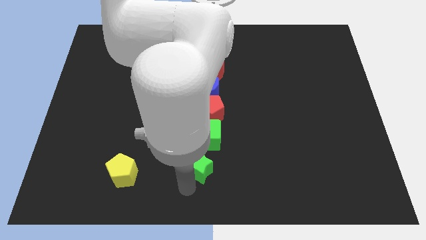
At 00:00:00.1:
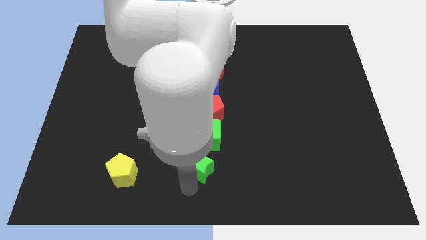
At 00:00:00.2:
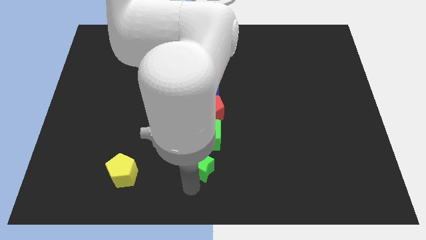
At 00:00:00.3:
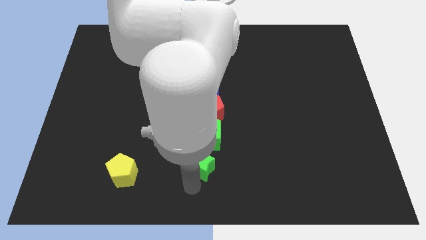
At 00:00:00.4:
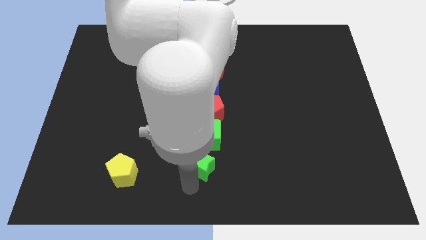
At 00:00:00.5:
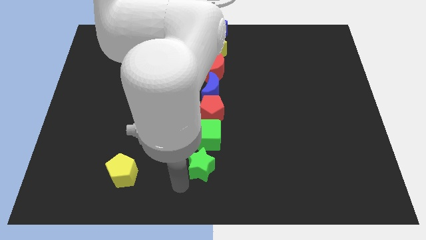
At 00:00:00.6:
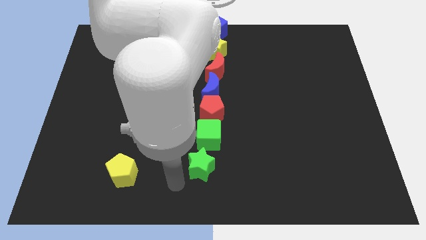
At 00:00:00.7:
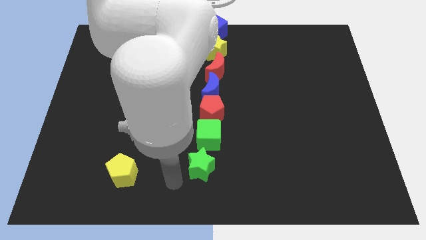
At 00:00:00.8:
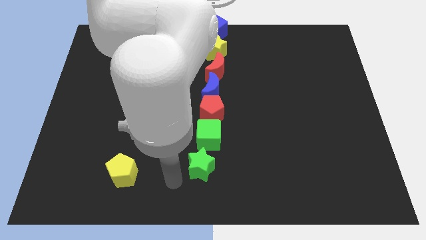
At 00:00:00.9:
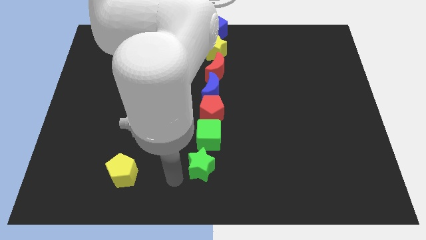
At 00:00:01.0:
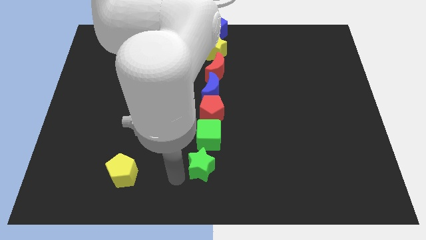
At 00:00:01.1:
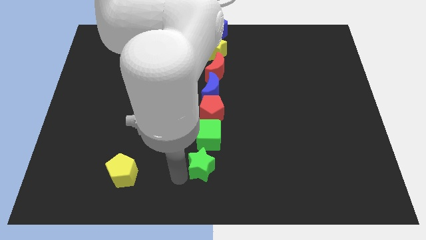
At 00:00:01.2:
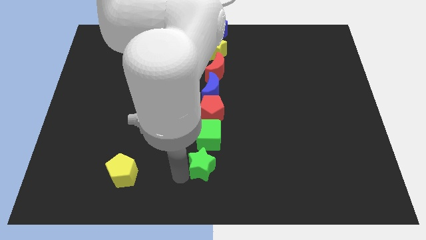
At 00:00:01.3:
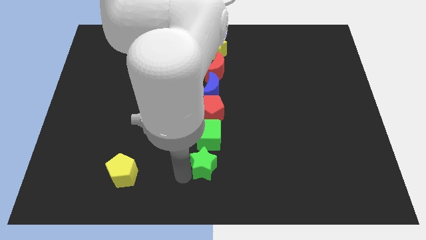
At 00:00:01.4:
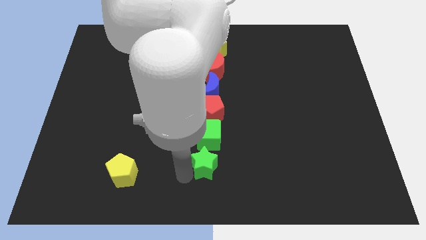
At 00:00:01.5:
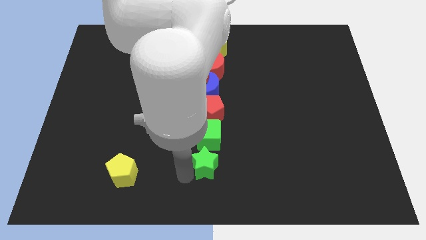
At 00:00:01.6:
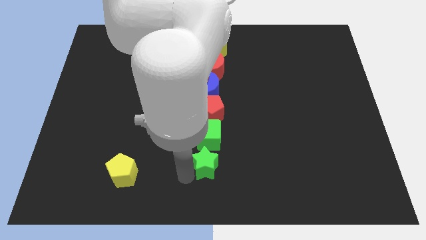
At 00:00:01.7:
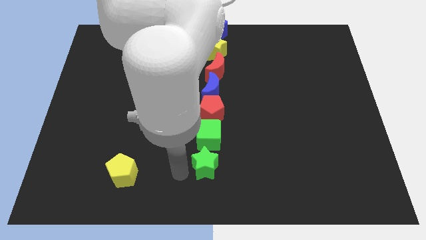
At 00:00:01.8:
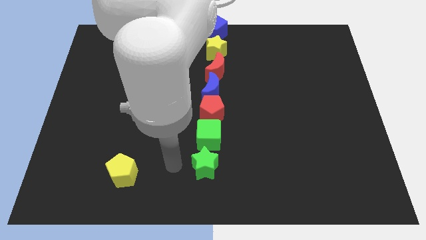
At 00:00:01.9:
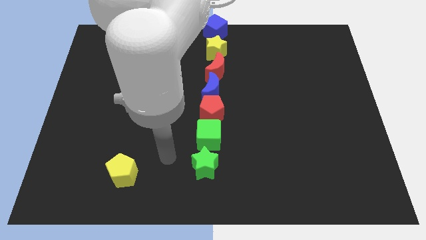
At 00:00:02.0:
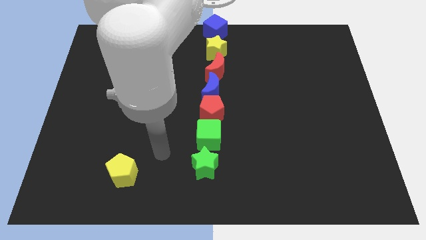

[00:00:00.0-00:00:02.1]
move the green star close to the green cube

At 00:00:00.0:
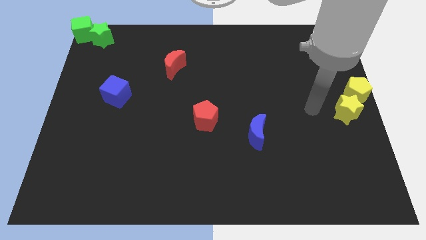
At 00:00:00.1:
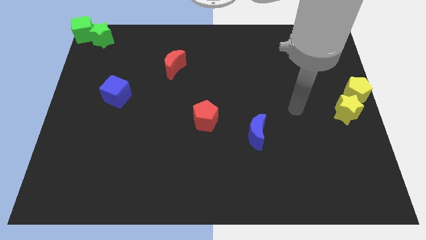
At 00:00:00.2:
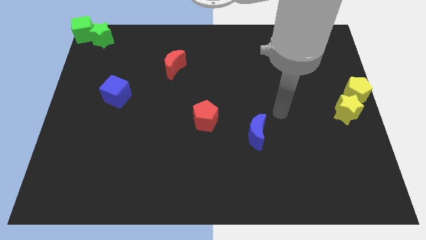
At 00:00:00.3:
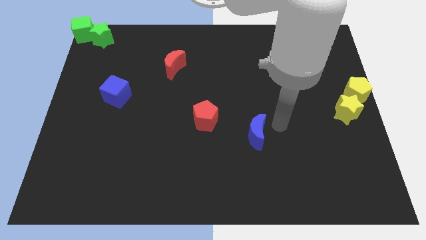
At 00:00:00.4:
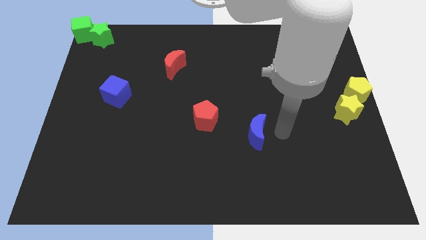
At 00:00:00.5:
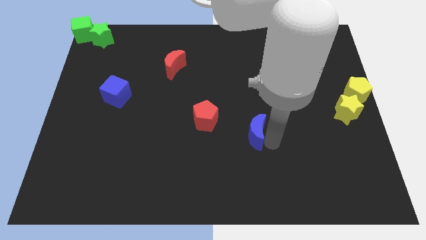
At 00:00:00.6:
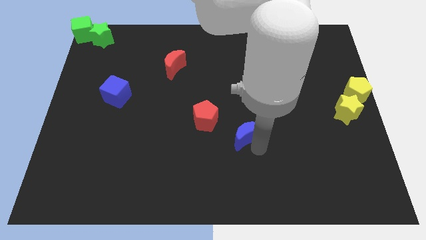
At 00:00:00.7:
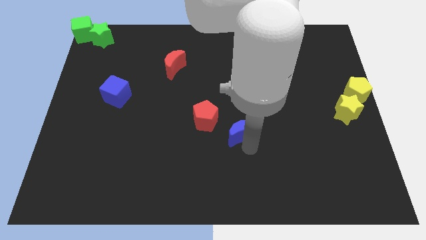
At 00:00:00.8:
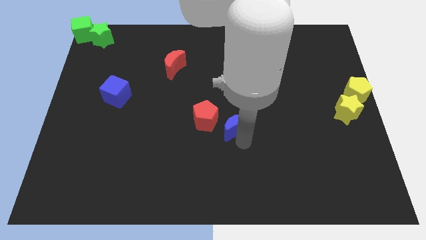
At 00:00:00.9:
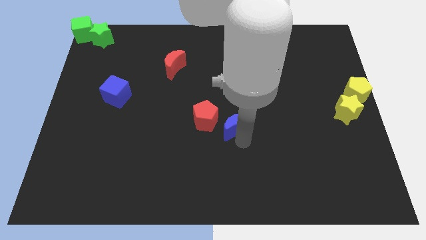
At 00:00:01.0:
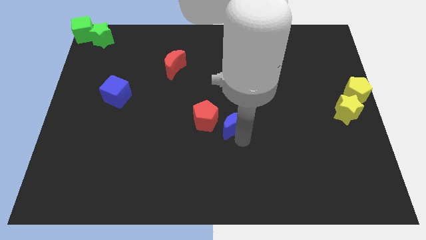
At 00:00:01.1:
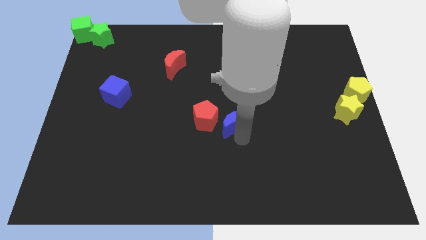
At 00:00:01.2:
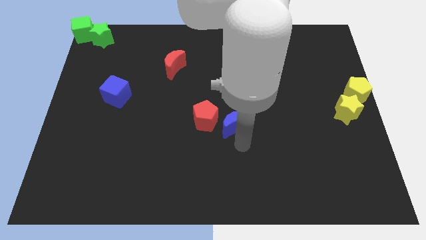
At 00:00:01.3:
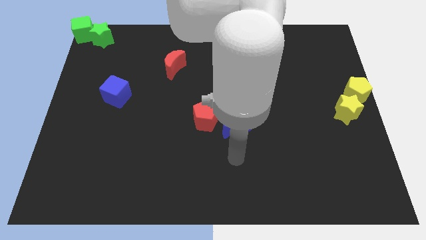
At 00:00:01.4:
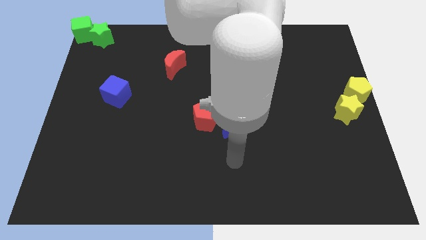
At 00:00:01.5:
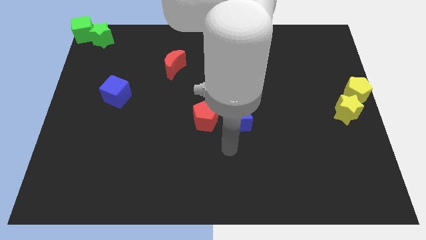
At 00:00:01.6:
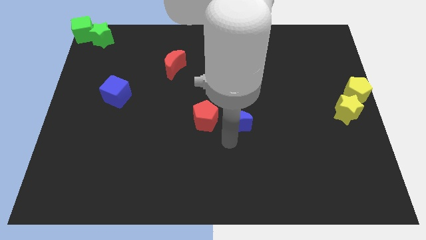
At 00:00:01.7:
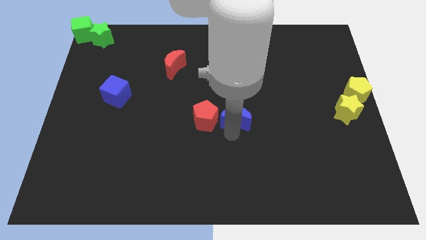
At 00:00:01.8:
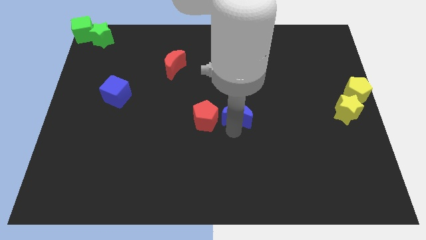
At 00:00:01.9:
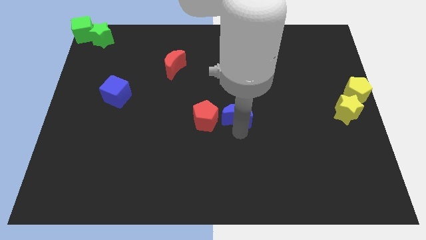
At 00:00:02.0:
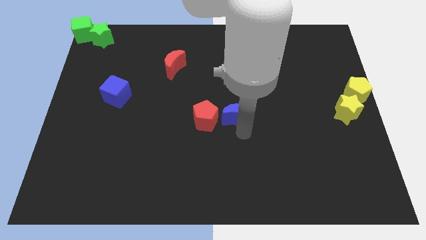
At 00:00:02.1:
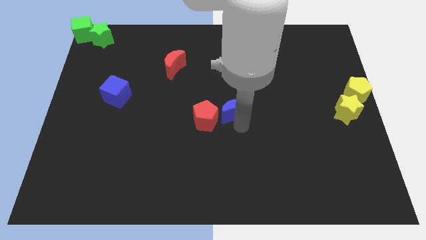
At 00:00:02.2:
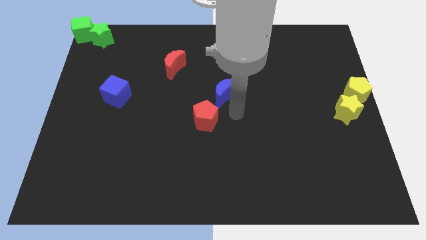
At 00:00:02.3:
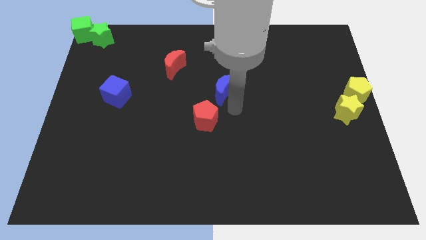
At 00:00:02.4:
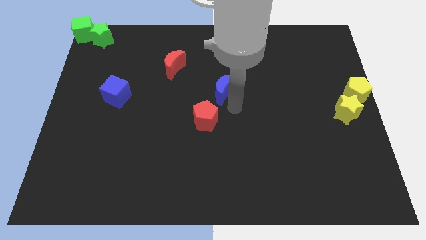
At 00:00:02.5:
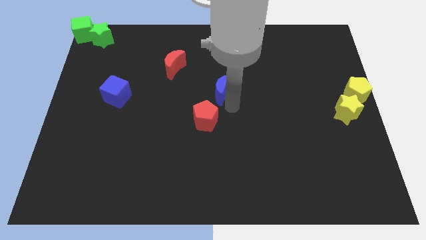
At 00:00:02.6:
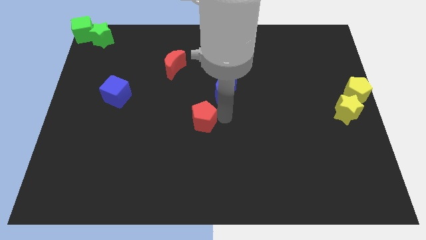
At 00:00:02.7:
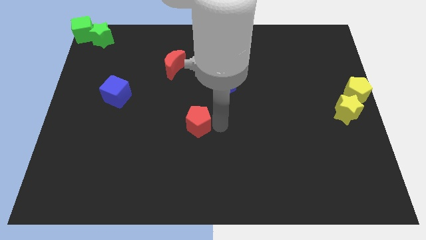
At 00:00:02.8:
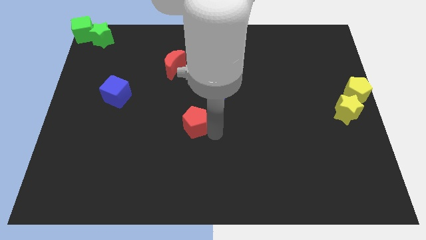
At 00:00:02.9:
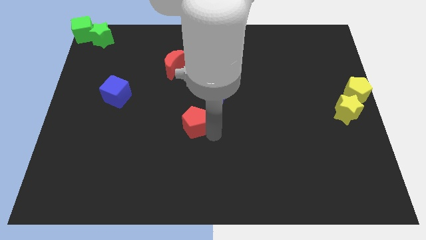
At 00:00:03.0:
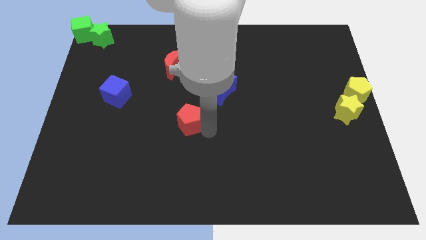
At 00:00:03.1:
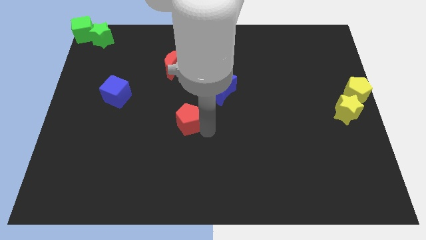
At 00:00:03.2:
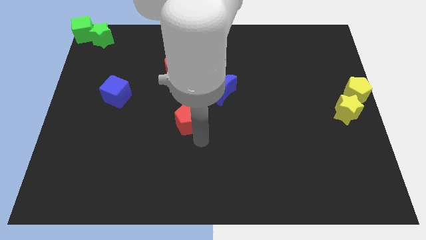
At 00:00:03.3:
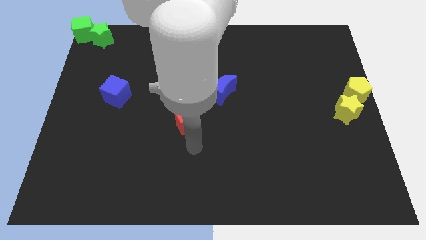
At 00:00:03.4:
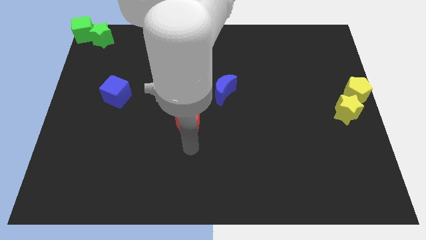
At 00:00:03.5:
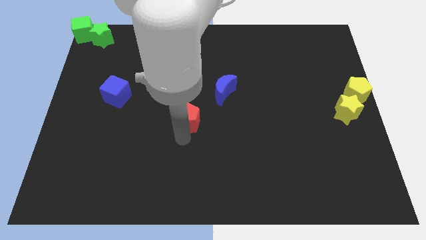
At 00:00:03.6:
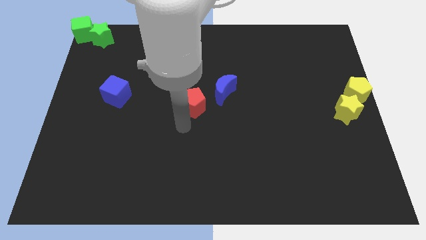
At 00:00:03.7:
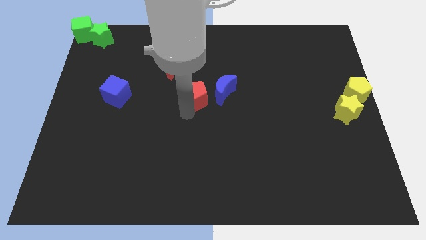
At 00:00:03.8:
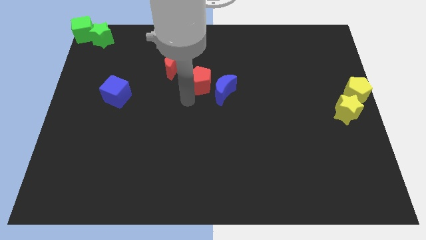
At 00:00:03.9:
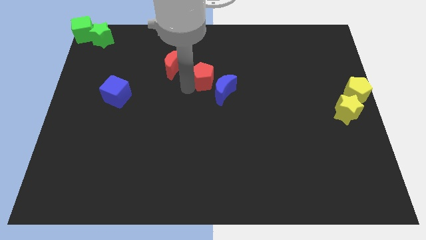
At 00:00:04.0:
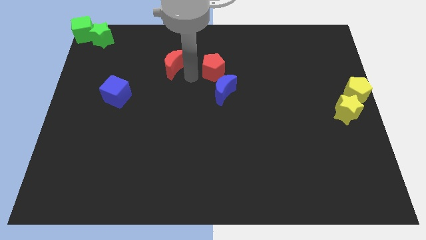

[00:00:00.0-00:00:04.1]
slide the red pentagon and blue moon diagonally to the bottom right side of the red moon

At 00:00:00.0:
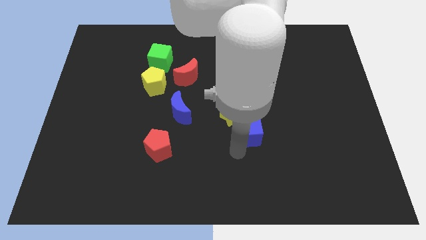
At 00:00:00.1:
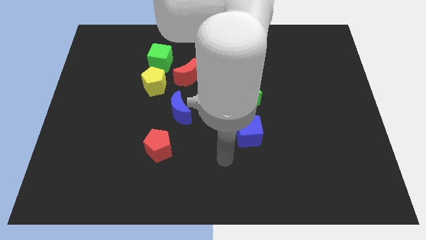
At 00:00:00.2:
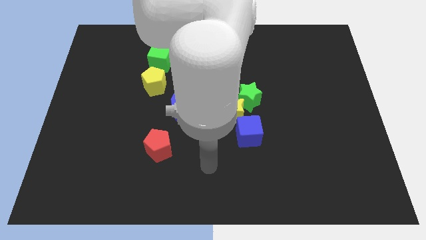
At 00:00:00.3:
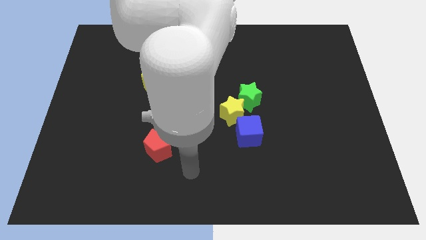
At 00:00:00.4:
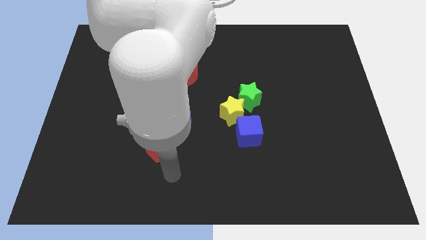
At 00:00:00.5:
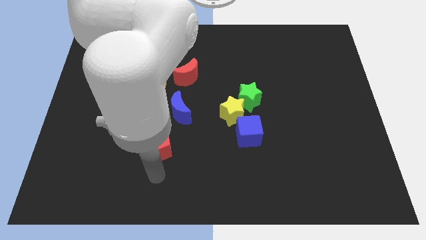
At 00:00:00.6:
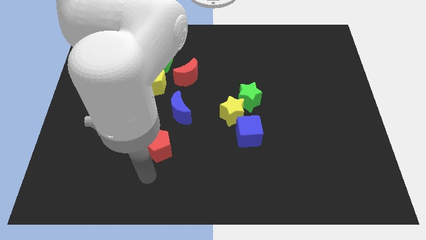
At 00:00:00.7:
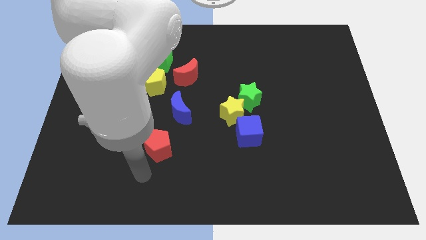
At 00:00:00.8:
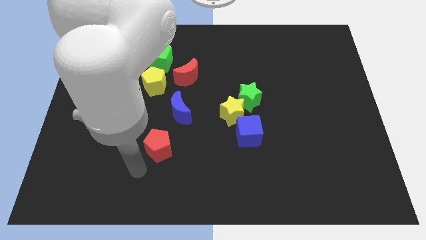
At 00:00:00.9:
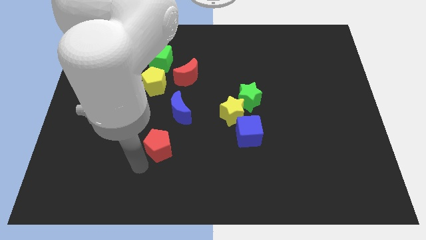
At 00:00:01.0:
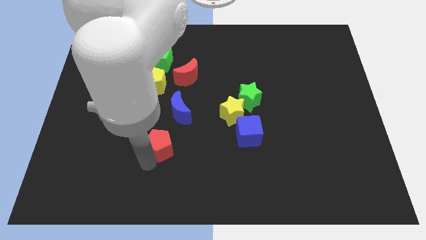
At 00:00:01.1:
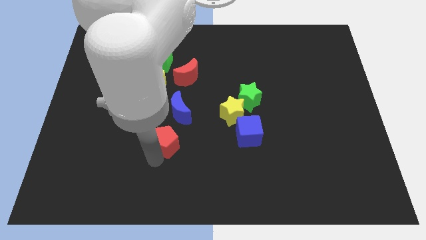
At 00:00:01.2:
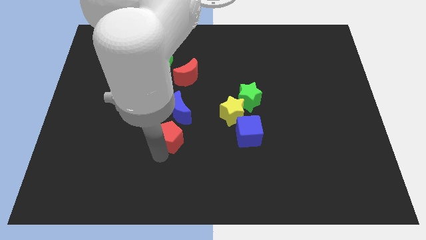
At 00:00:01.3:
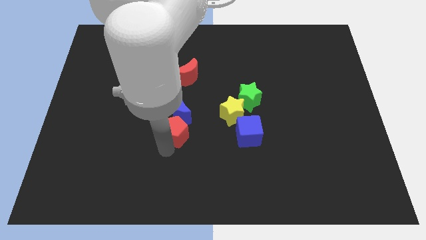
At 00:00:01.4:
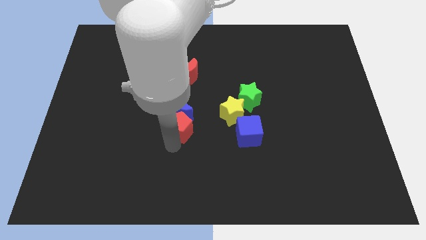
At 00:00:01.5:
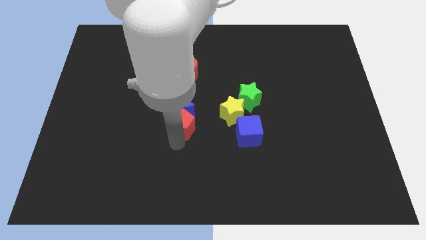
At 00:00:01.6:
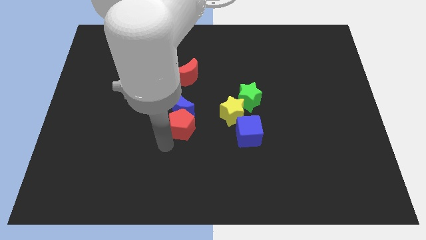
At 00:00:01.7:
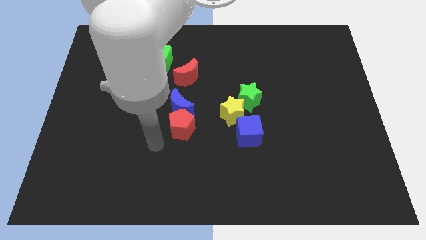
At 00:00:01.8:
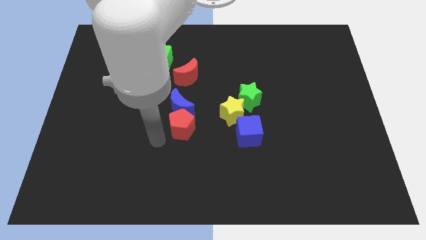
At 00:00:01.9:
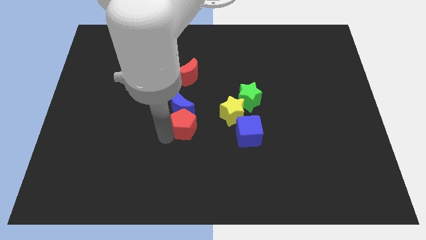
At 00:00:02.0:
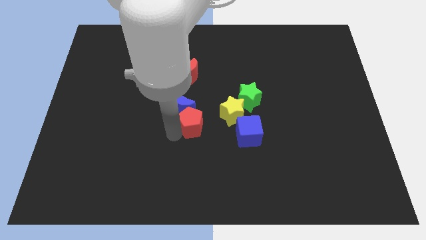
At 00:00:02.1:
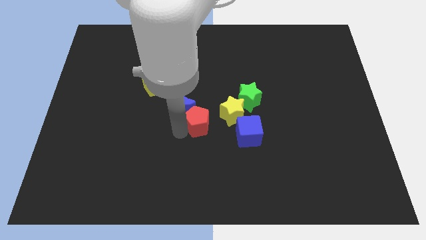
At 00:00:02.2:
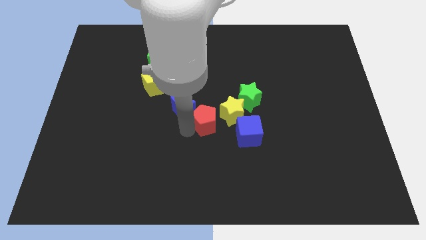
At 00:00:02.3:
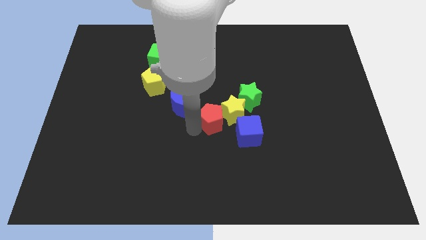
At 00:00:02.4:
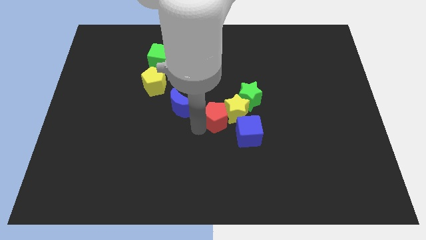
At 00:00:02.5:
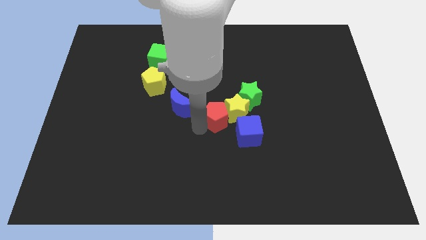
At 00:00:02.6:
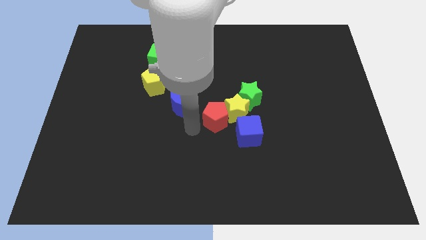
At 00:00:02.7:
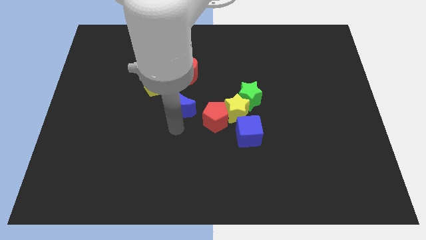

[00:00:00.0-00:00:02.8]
push the red pentagon towards the center of the board
